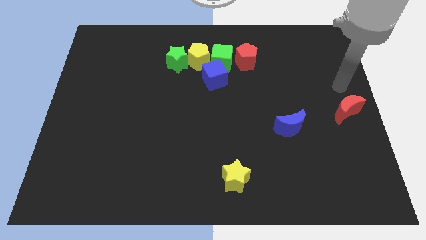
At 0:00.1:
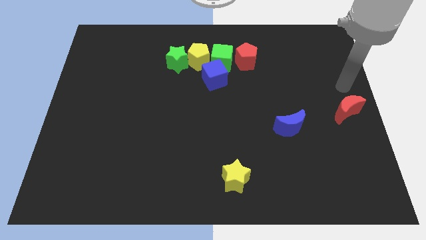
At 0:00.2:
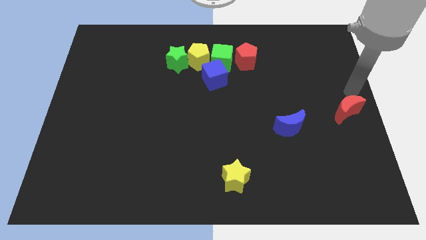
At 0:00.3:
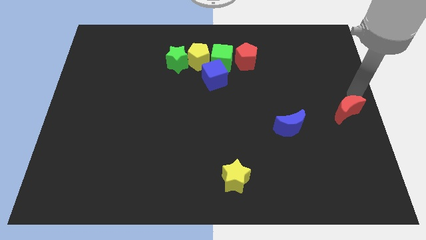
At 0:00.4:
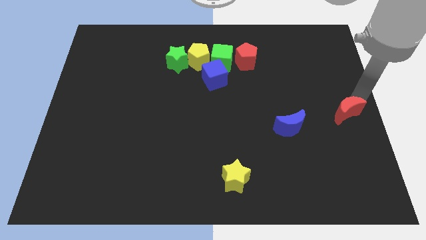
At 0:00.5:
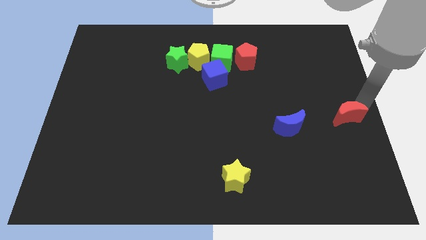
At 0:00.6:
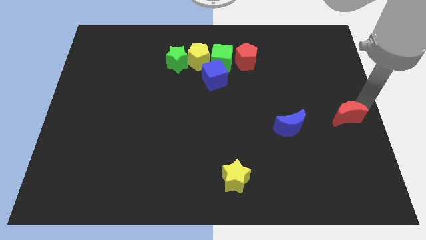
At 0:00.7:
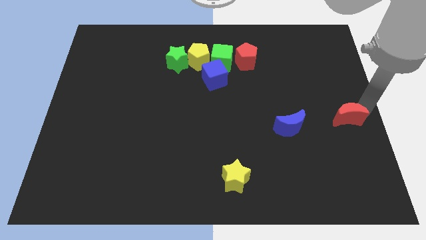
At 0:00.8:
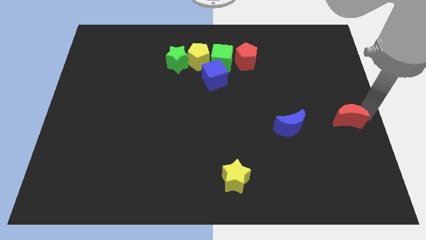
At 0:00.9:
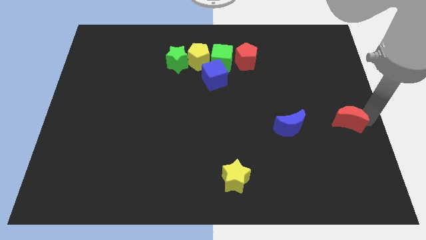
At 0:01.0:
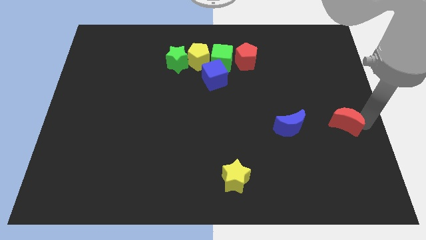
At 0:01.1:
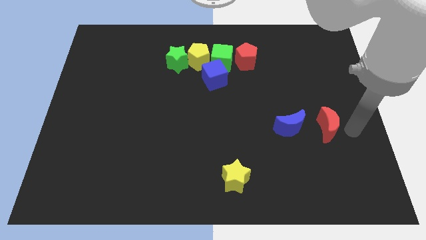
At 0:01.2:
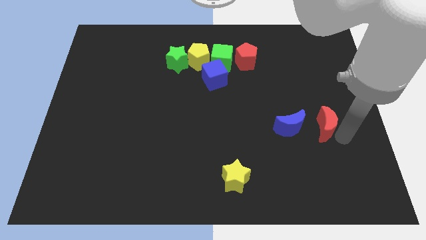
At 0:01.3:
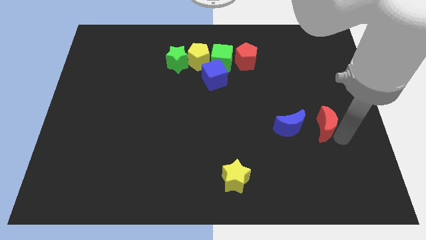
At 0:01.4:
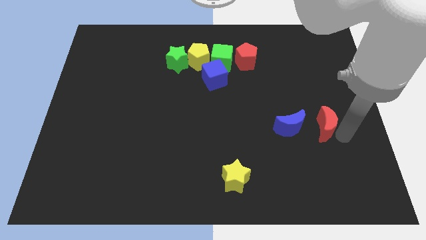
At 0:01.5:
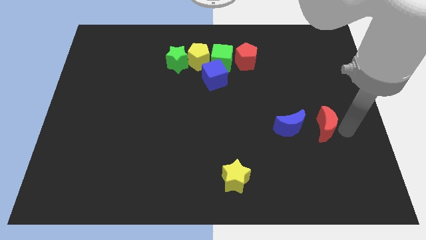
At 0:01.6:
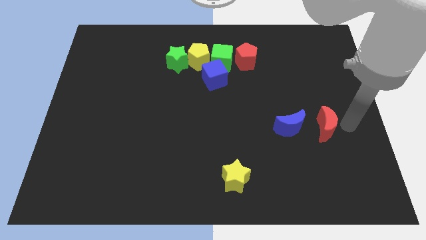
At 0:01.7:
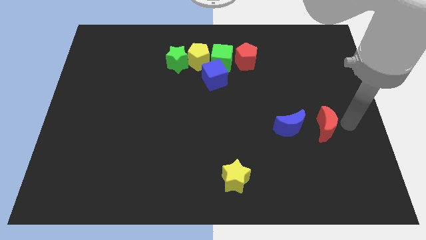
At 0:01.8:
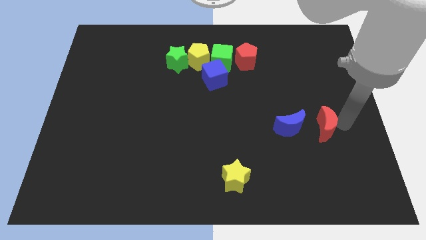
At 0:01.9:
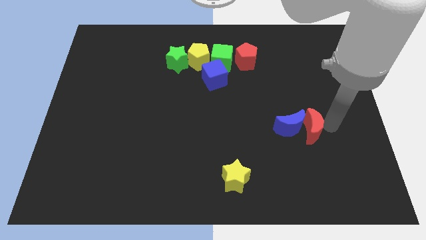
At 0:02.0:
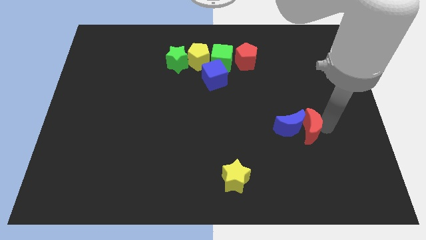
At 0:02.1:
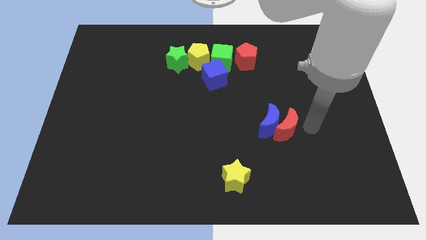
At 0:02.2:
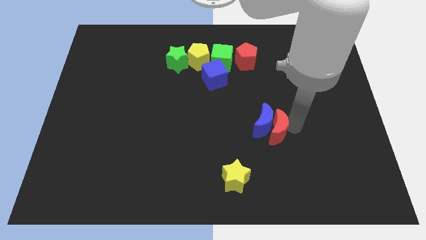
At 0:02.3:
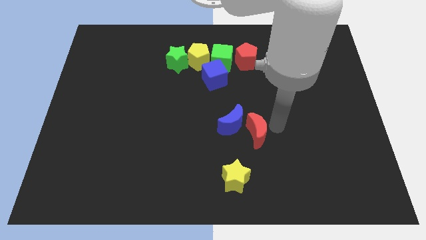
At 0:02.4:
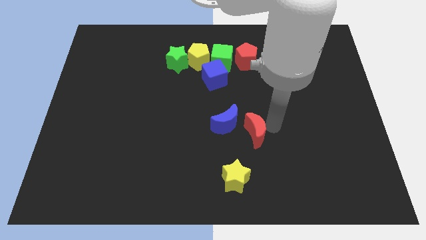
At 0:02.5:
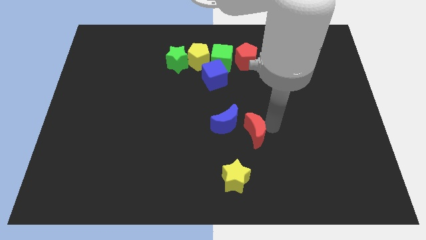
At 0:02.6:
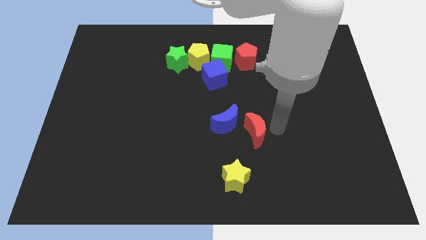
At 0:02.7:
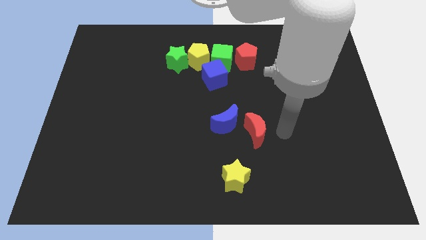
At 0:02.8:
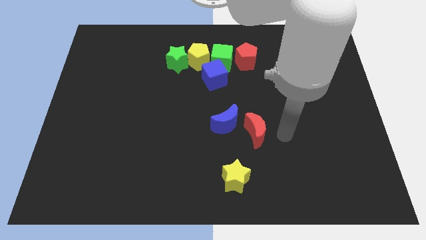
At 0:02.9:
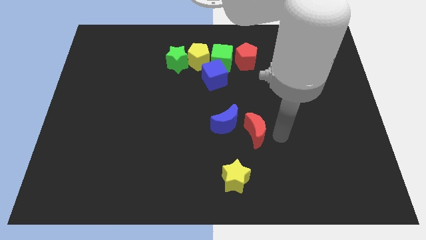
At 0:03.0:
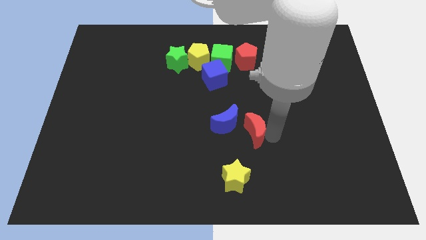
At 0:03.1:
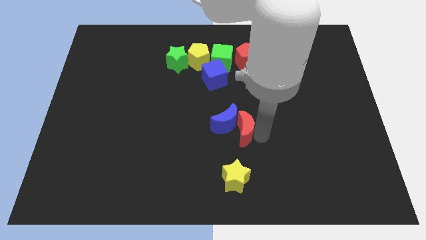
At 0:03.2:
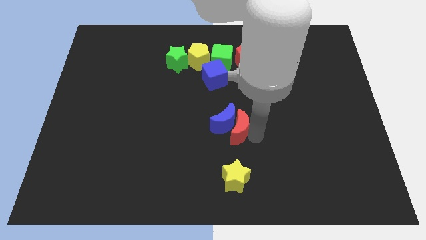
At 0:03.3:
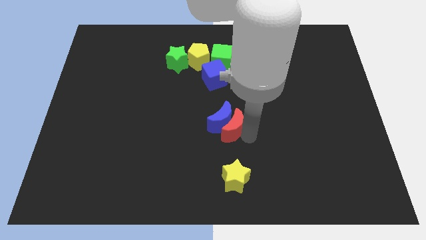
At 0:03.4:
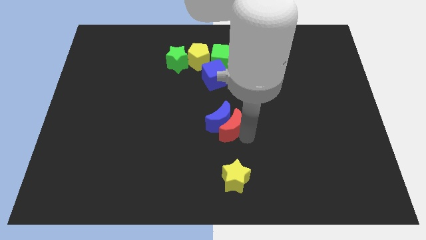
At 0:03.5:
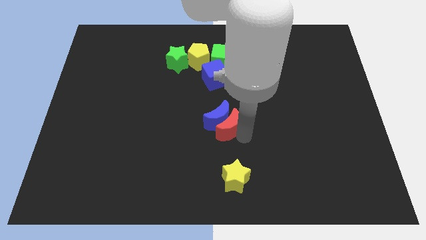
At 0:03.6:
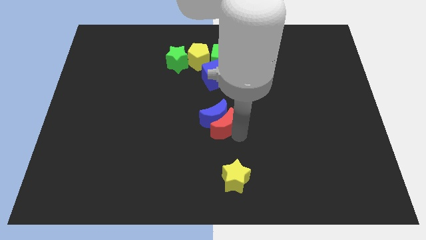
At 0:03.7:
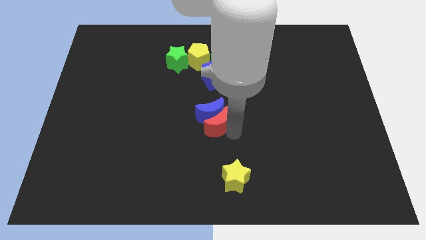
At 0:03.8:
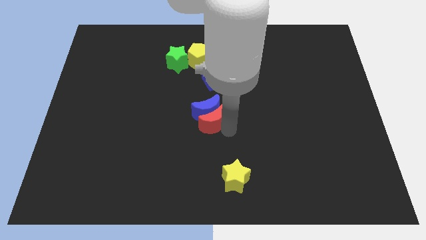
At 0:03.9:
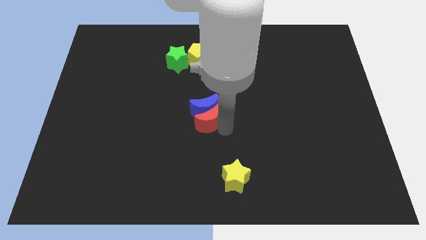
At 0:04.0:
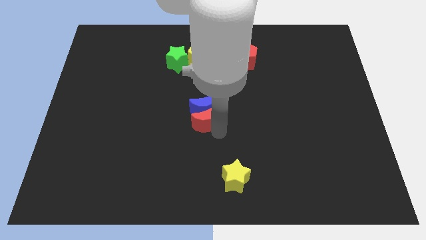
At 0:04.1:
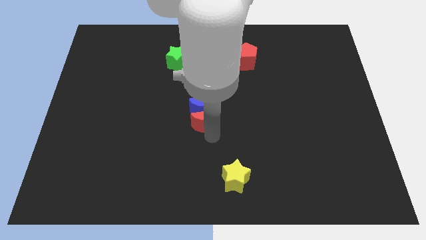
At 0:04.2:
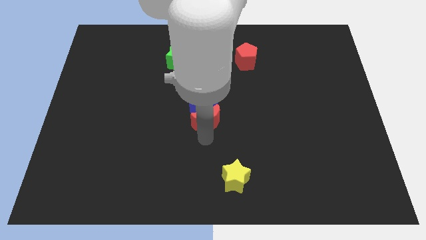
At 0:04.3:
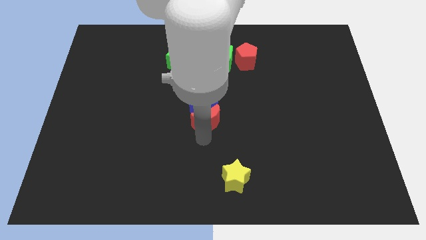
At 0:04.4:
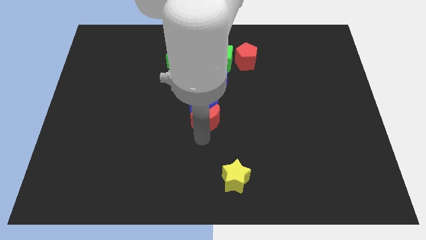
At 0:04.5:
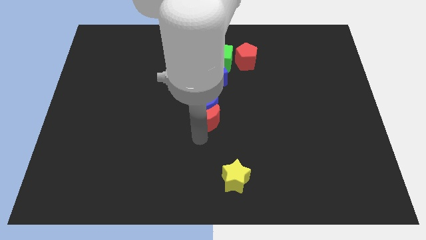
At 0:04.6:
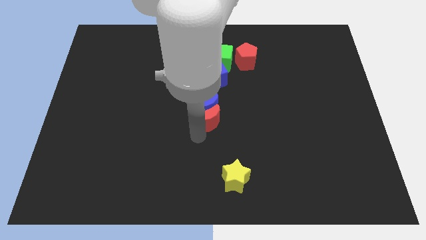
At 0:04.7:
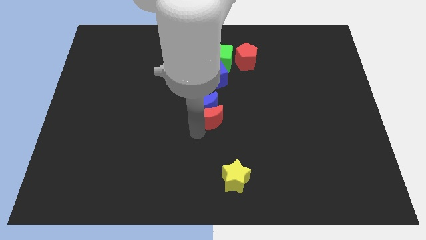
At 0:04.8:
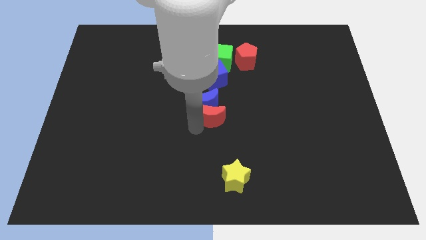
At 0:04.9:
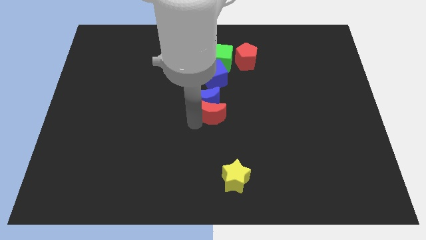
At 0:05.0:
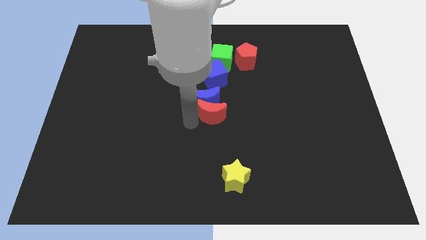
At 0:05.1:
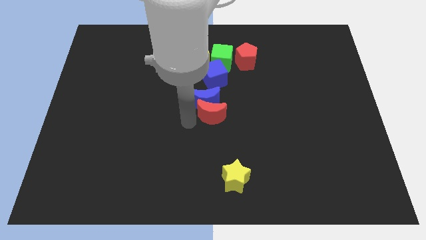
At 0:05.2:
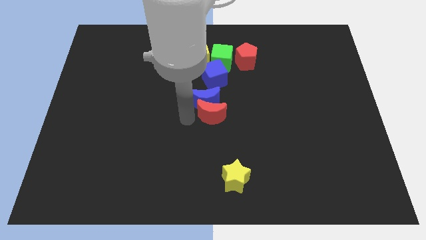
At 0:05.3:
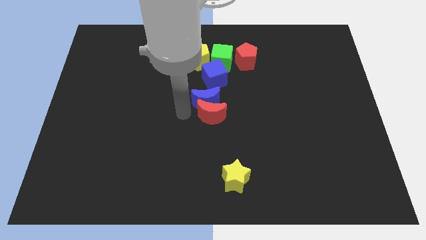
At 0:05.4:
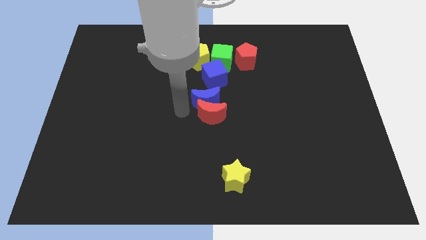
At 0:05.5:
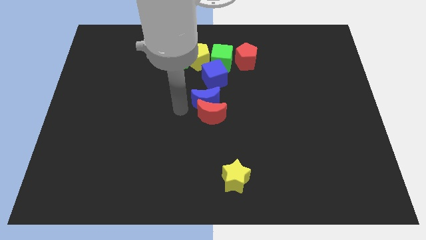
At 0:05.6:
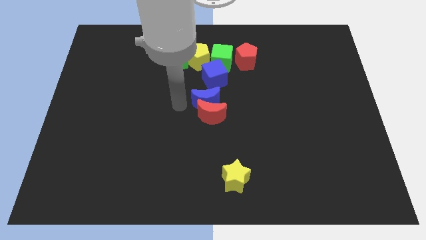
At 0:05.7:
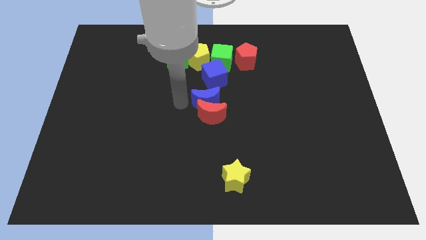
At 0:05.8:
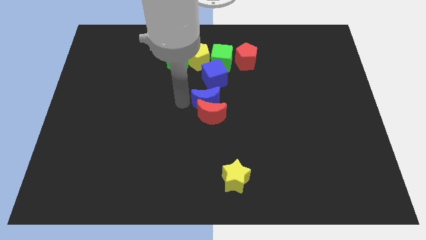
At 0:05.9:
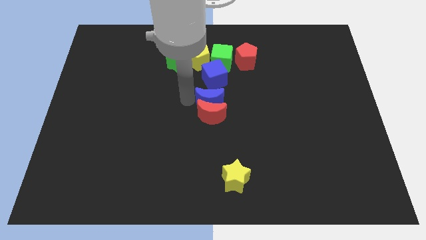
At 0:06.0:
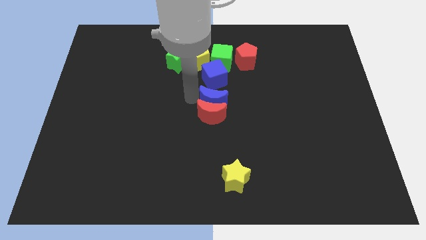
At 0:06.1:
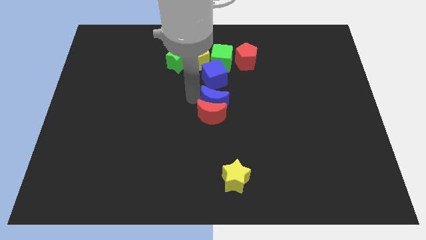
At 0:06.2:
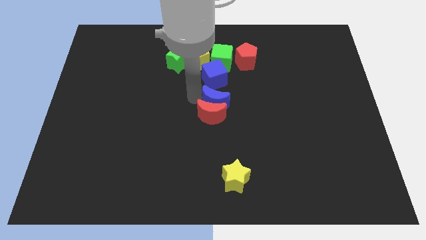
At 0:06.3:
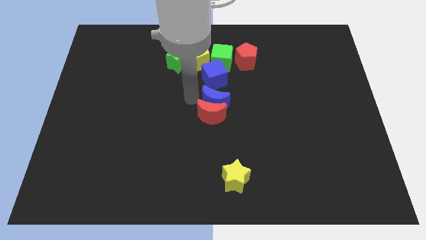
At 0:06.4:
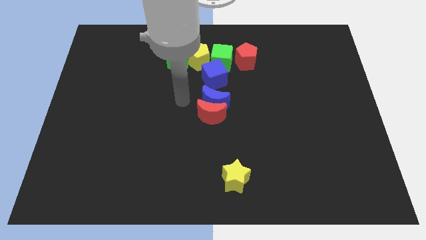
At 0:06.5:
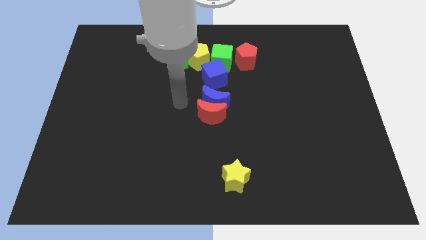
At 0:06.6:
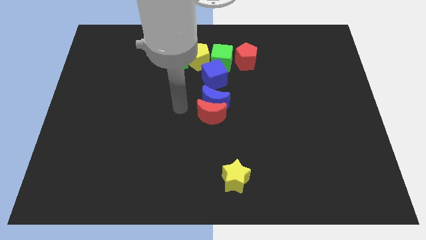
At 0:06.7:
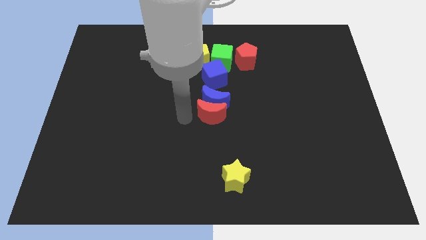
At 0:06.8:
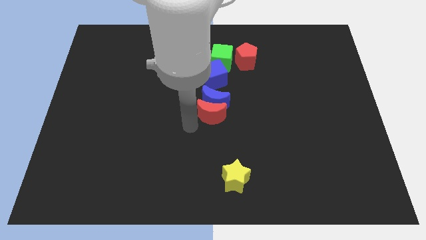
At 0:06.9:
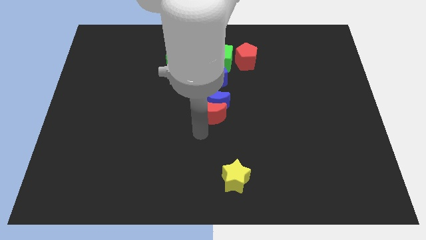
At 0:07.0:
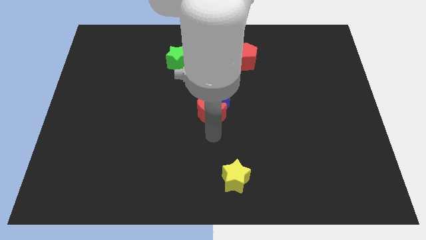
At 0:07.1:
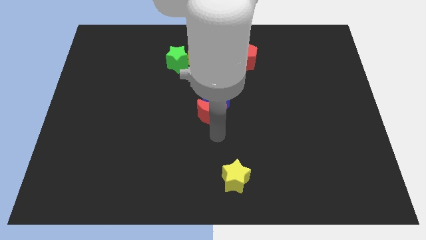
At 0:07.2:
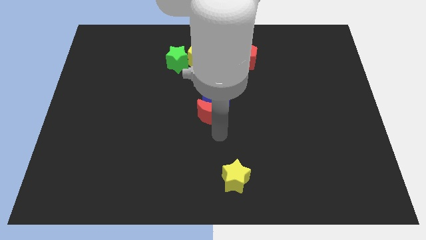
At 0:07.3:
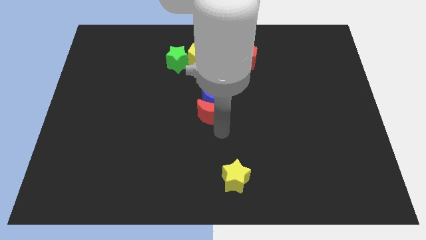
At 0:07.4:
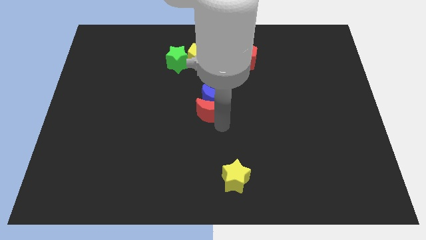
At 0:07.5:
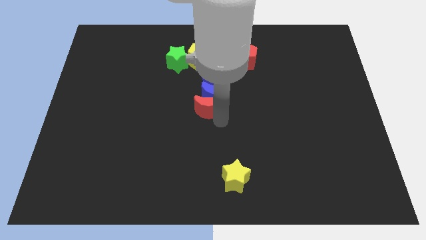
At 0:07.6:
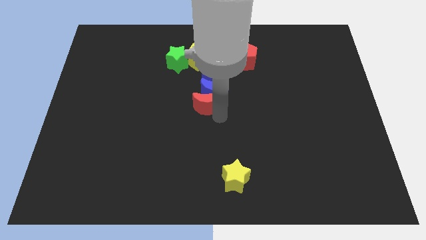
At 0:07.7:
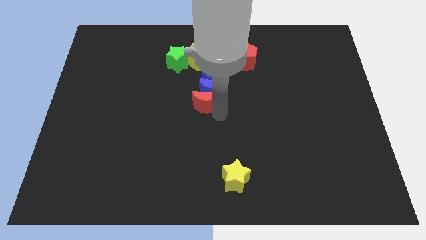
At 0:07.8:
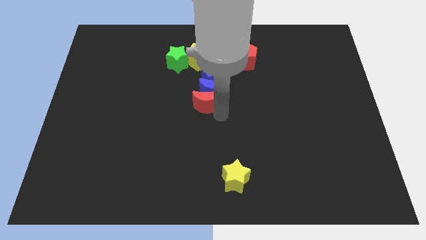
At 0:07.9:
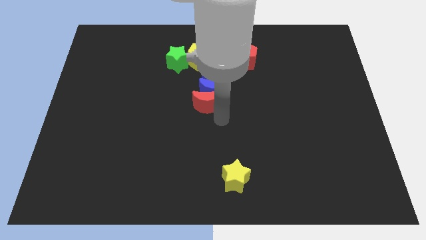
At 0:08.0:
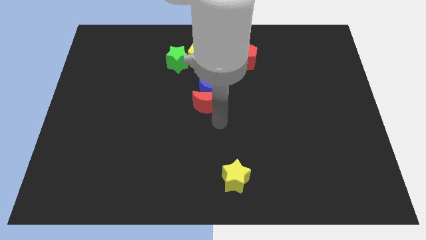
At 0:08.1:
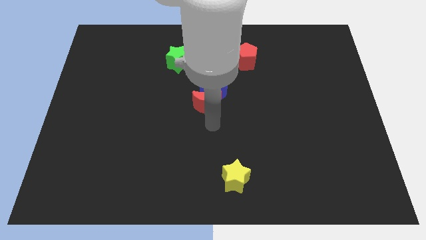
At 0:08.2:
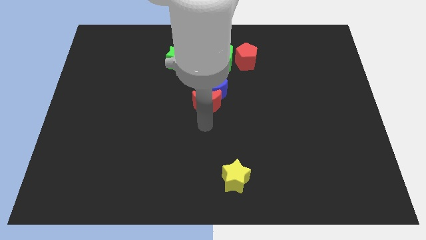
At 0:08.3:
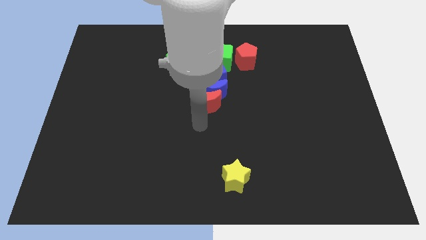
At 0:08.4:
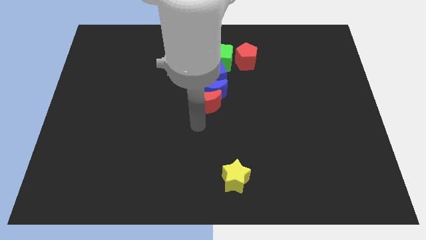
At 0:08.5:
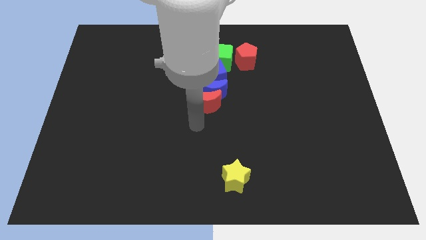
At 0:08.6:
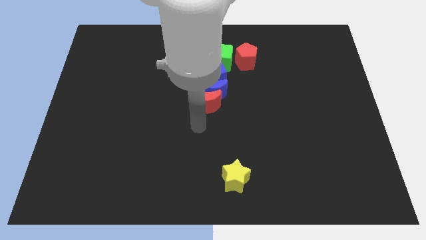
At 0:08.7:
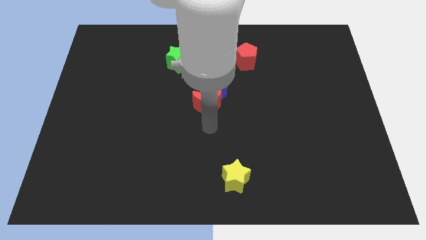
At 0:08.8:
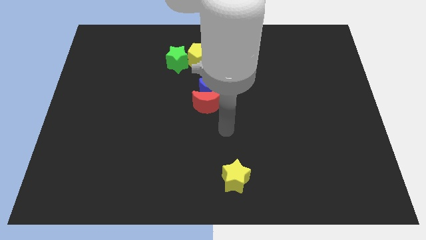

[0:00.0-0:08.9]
move the red moon and blue moon together into the group of blocks
